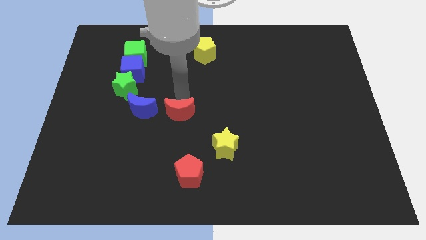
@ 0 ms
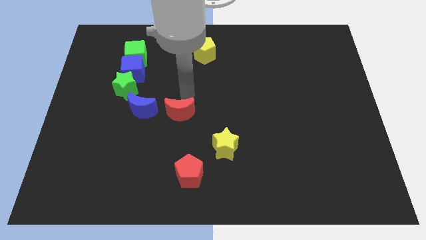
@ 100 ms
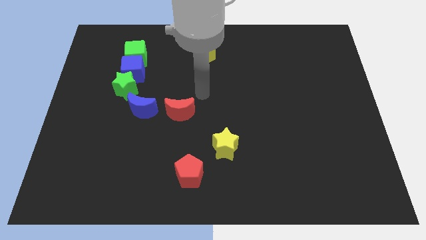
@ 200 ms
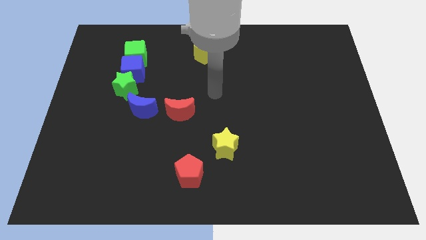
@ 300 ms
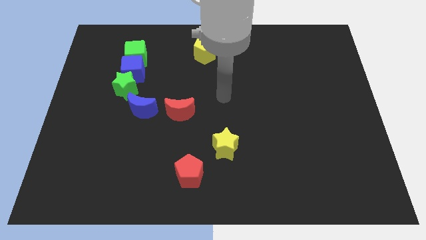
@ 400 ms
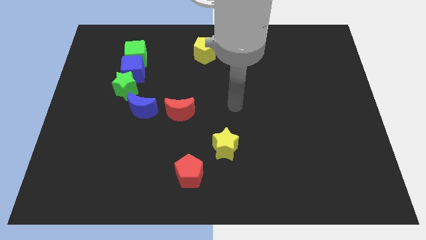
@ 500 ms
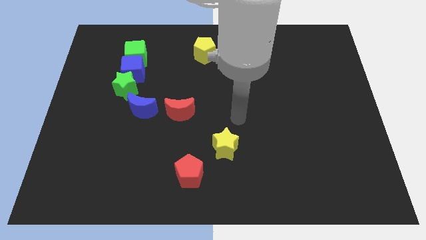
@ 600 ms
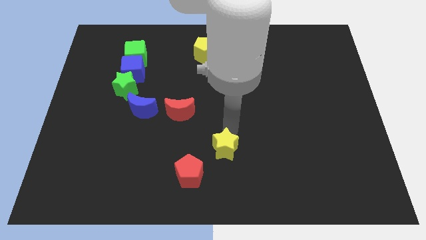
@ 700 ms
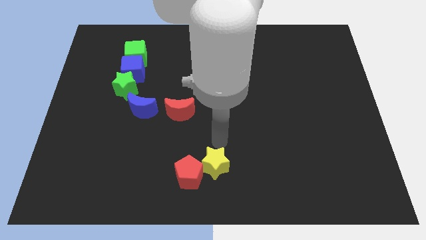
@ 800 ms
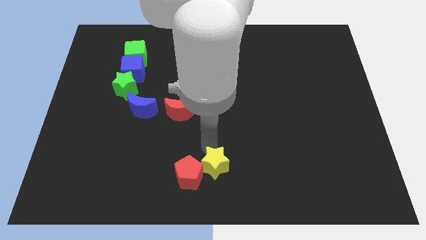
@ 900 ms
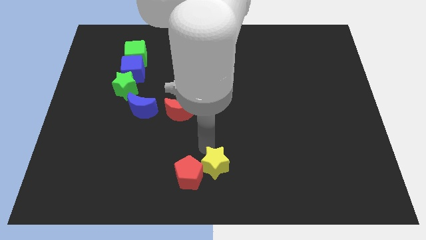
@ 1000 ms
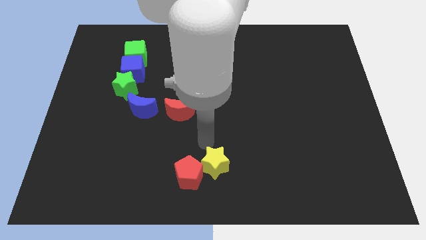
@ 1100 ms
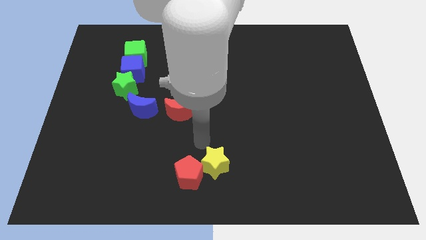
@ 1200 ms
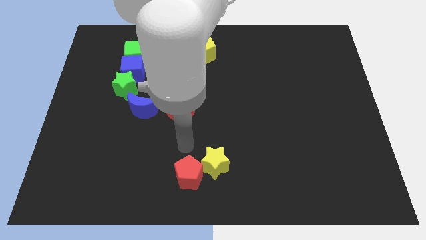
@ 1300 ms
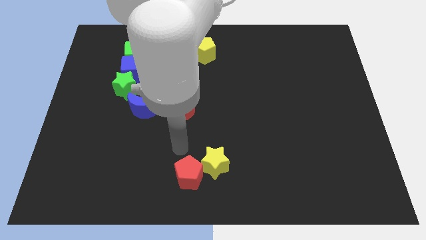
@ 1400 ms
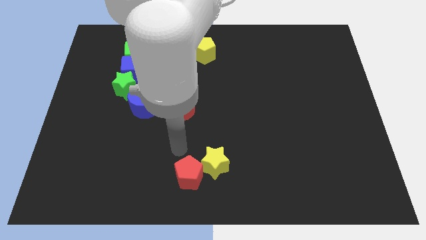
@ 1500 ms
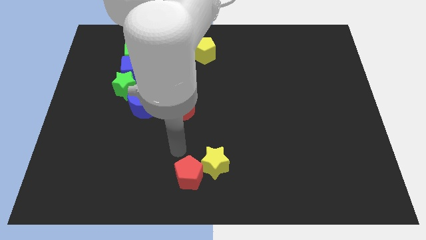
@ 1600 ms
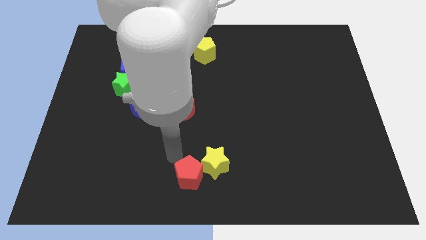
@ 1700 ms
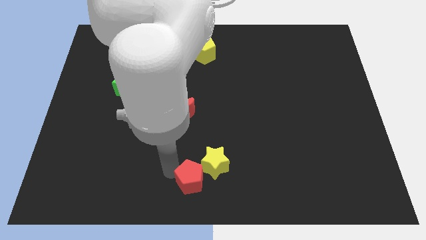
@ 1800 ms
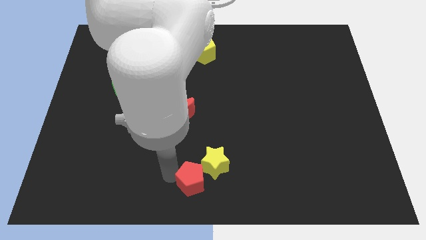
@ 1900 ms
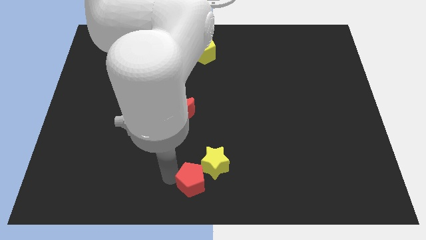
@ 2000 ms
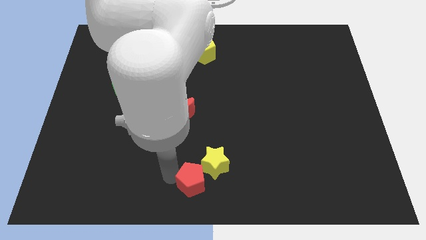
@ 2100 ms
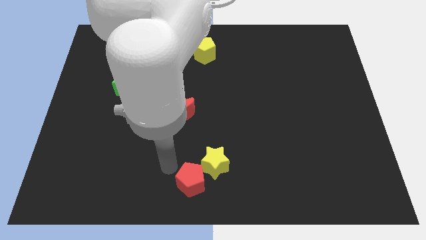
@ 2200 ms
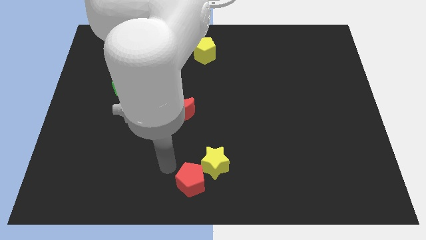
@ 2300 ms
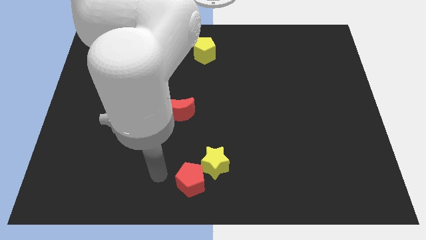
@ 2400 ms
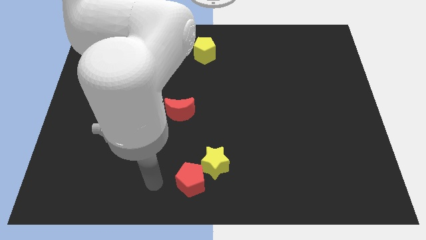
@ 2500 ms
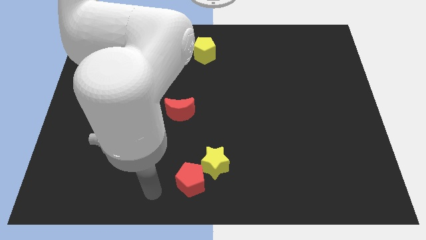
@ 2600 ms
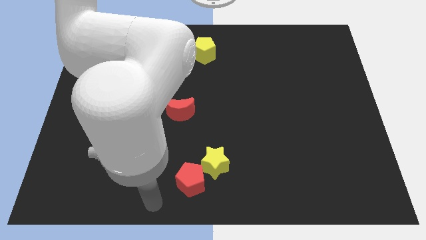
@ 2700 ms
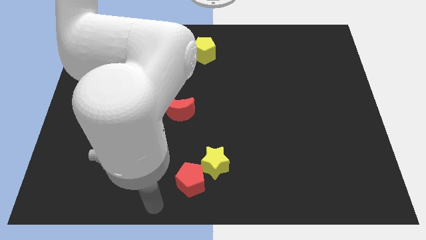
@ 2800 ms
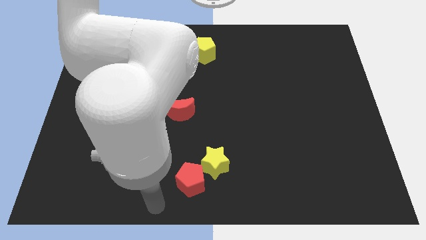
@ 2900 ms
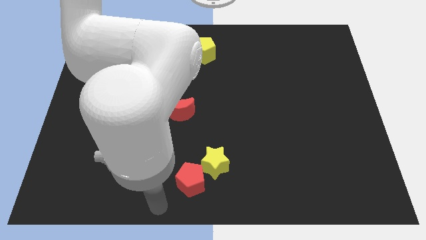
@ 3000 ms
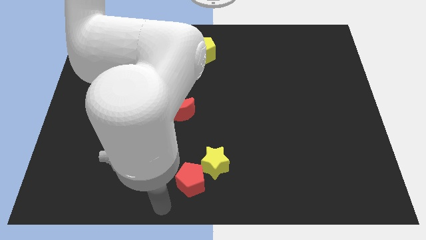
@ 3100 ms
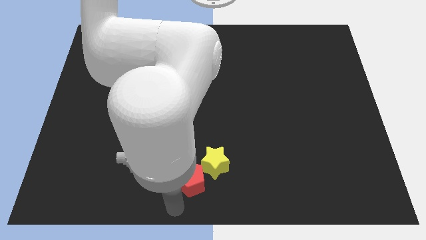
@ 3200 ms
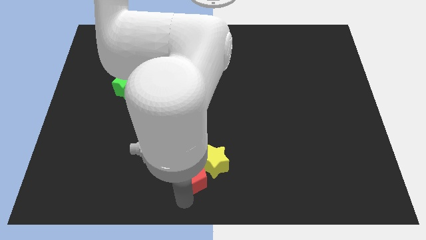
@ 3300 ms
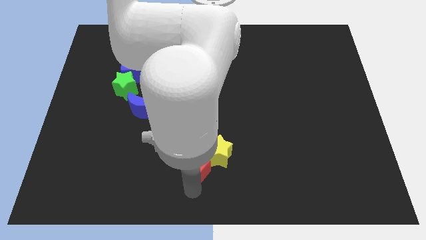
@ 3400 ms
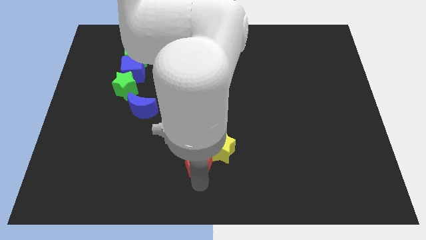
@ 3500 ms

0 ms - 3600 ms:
move the yellow star and the red pentagon to the top of the board

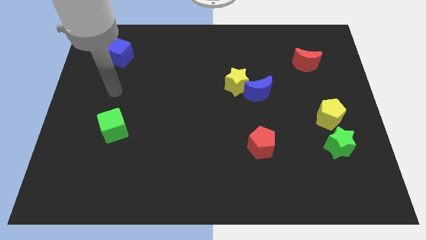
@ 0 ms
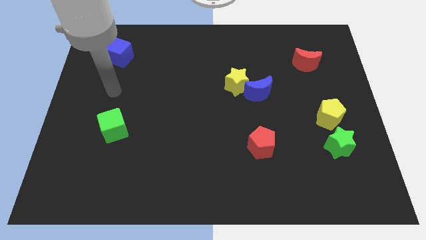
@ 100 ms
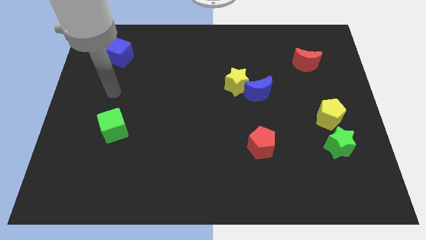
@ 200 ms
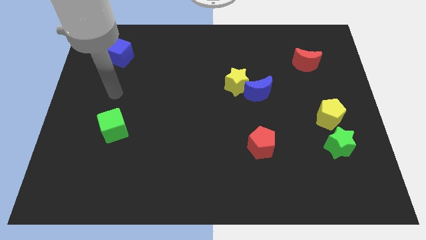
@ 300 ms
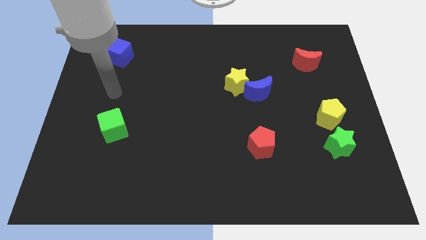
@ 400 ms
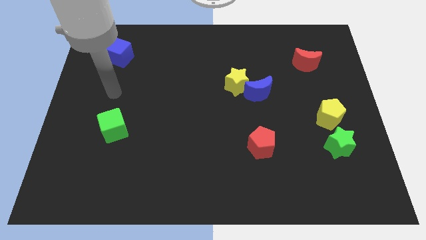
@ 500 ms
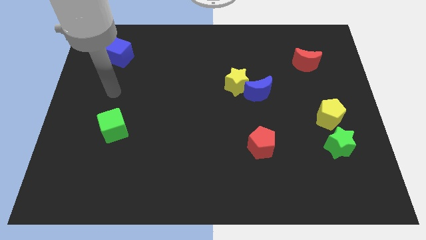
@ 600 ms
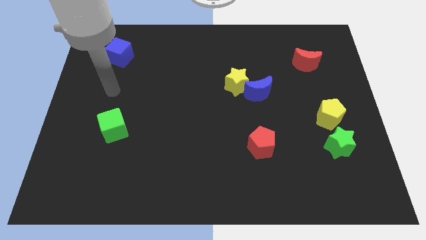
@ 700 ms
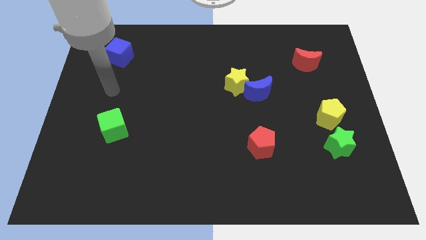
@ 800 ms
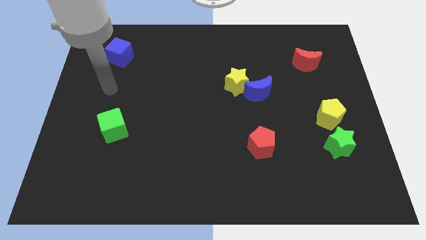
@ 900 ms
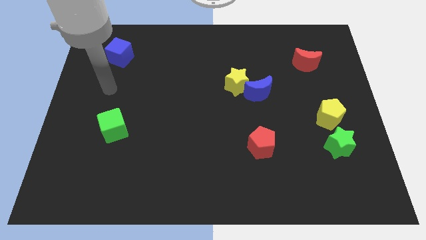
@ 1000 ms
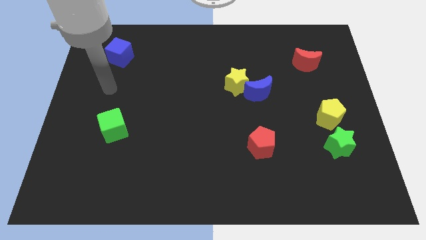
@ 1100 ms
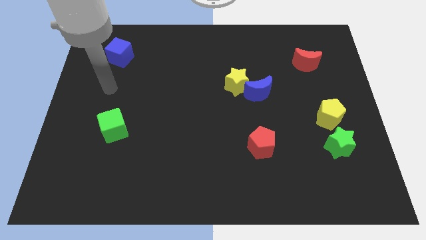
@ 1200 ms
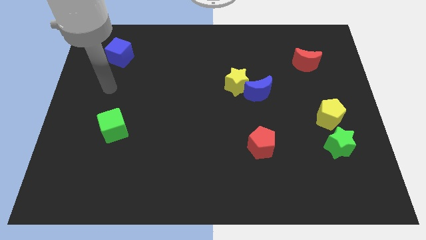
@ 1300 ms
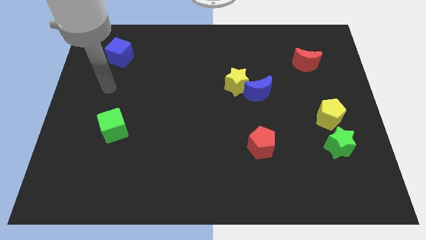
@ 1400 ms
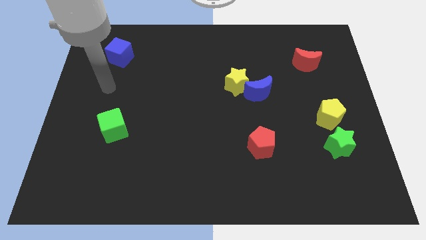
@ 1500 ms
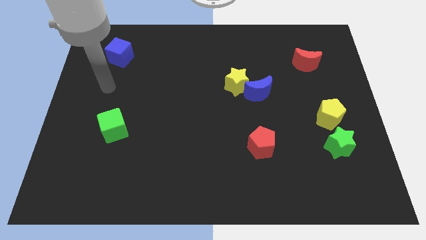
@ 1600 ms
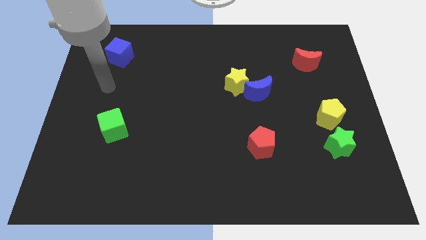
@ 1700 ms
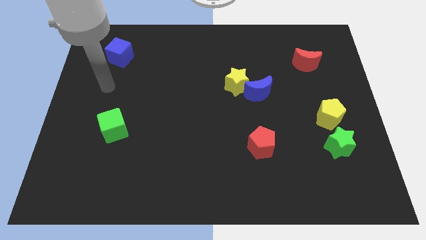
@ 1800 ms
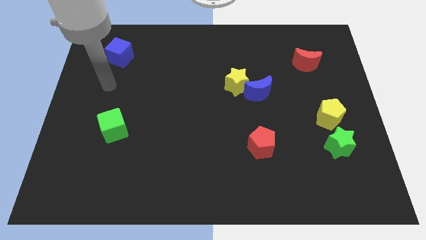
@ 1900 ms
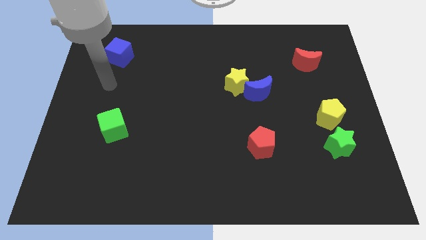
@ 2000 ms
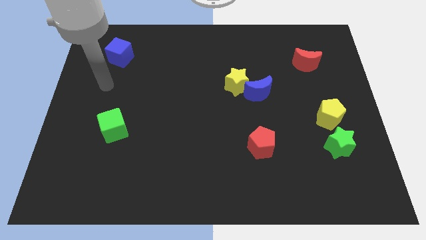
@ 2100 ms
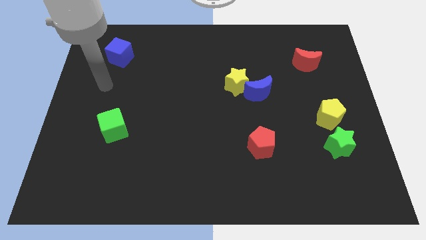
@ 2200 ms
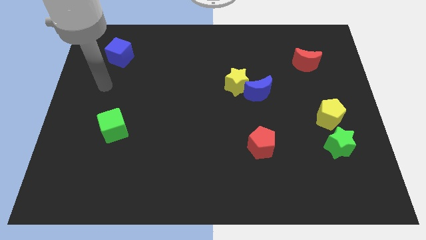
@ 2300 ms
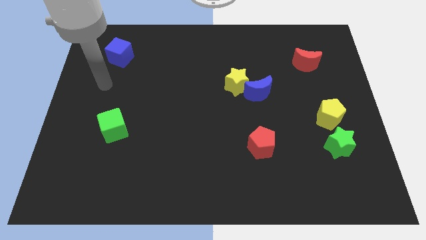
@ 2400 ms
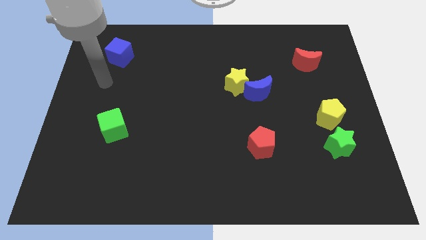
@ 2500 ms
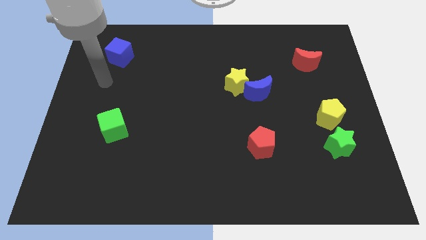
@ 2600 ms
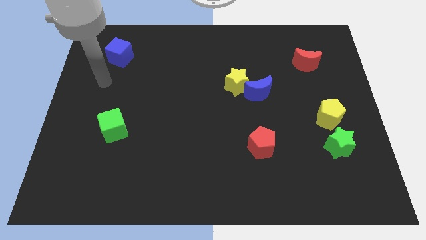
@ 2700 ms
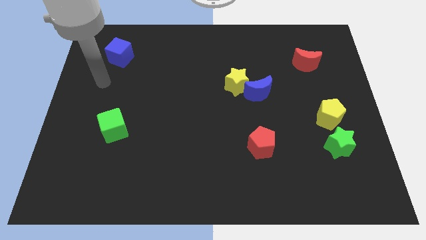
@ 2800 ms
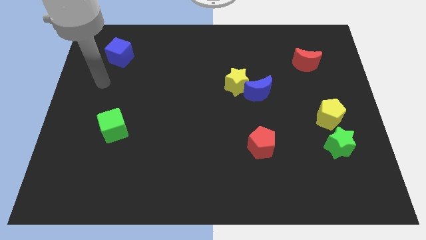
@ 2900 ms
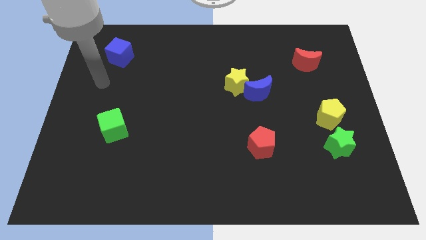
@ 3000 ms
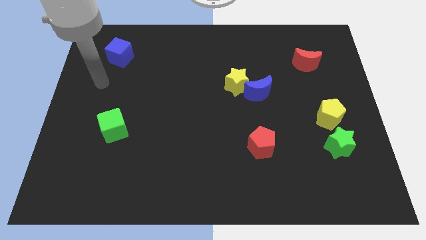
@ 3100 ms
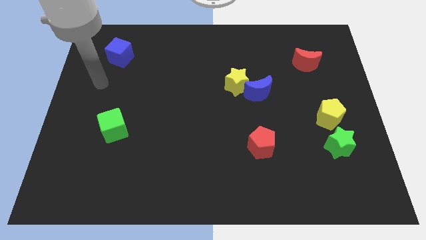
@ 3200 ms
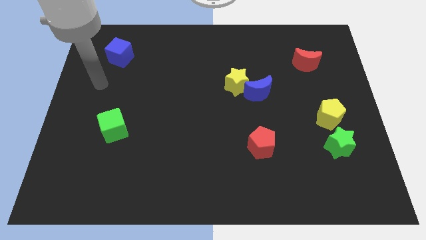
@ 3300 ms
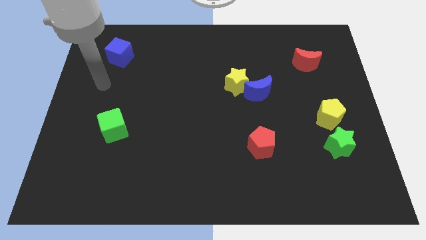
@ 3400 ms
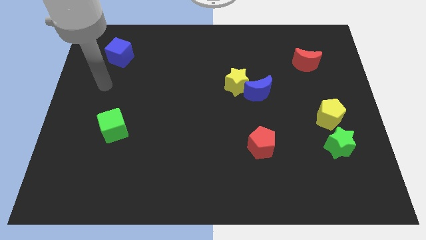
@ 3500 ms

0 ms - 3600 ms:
adjust your hand at its origin position

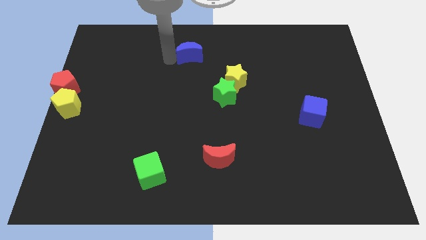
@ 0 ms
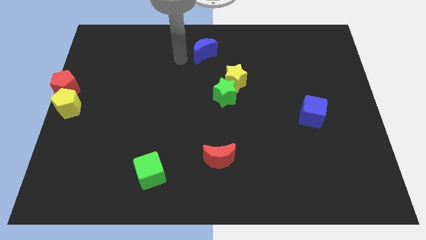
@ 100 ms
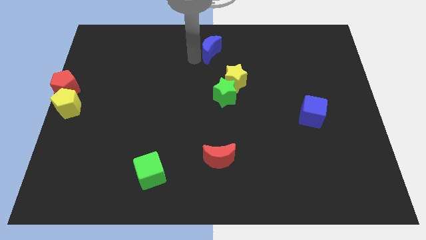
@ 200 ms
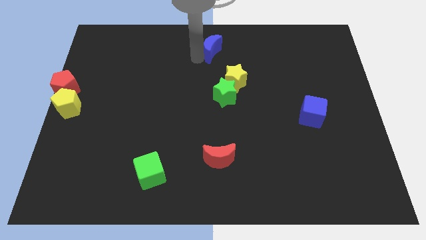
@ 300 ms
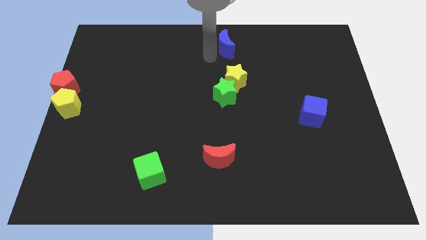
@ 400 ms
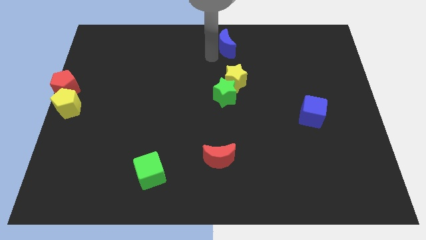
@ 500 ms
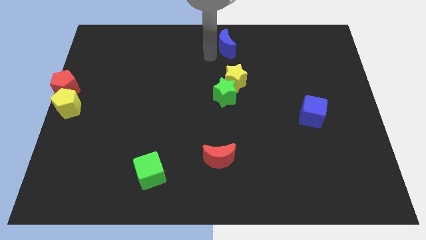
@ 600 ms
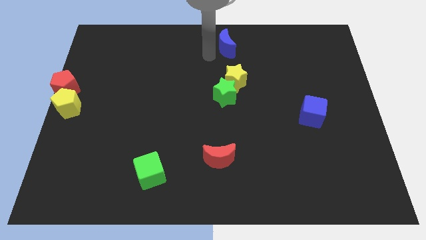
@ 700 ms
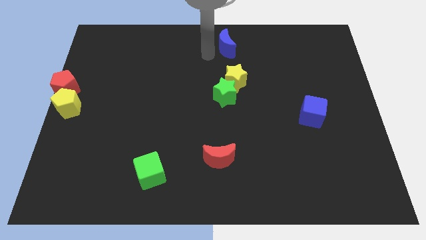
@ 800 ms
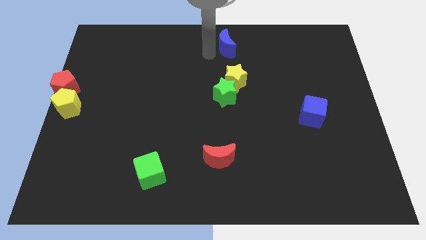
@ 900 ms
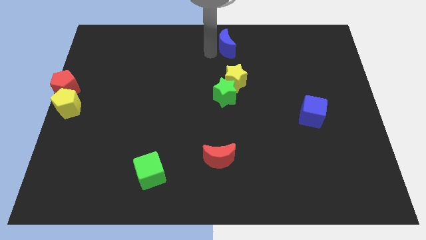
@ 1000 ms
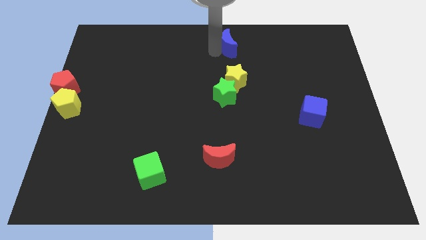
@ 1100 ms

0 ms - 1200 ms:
move blue moon above the yellow star

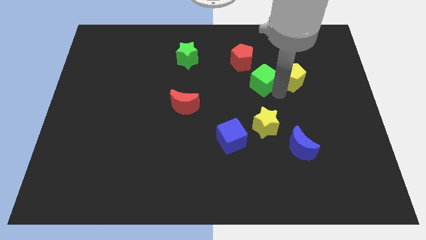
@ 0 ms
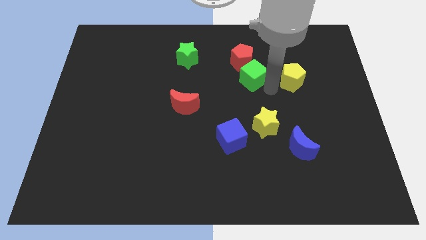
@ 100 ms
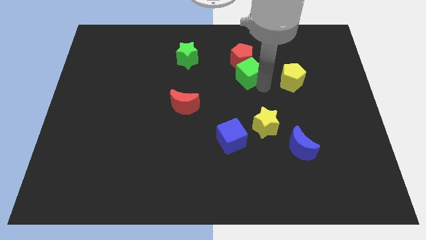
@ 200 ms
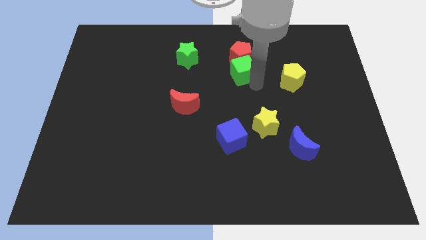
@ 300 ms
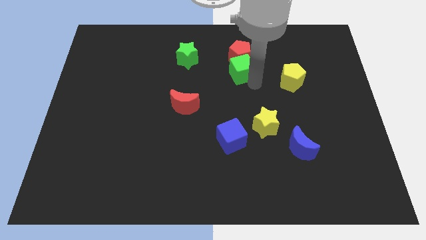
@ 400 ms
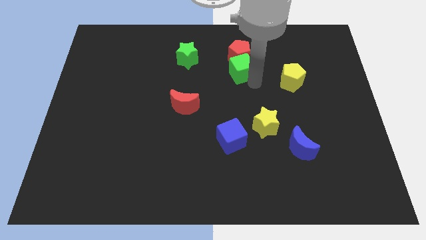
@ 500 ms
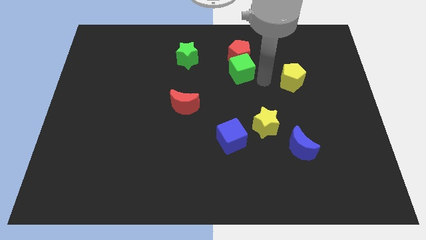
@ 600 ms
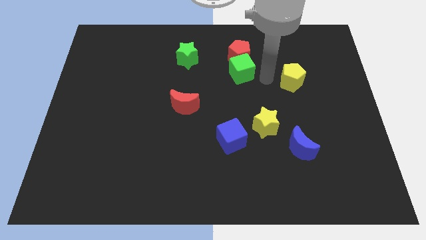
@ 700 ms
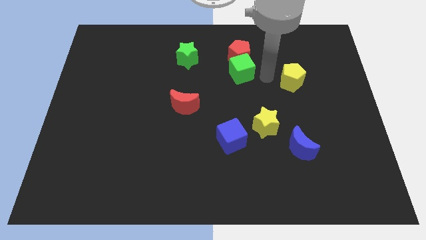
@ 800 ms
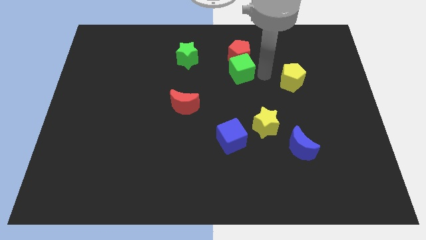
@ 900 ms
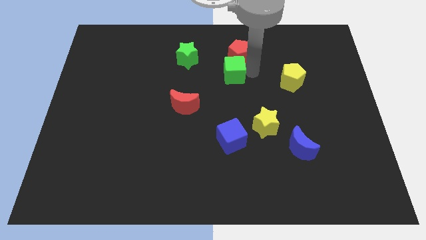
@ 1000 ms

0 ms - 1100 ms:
push the green cube into the bottom side of the red pentagon
